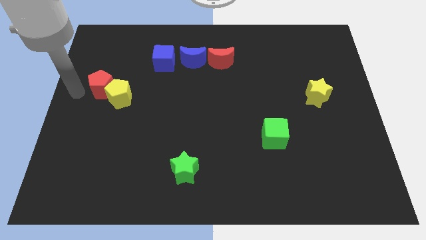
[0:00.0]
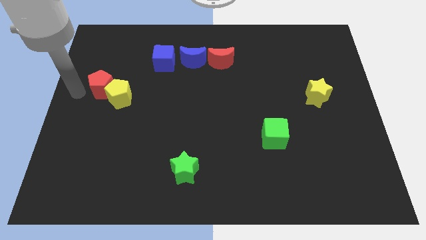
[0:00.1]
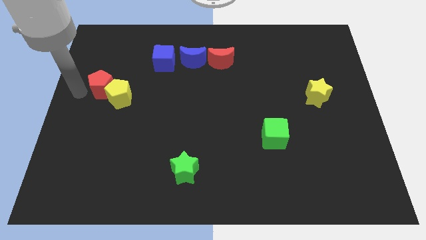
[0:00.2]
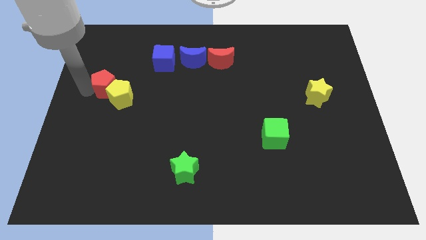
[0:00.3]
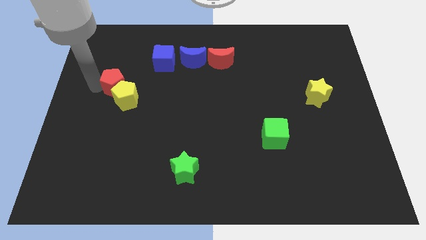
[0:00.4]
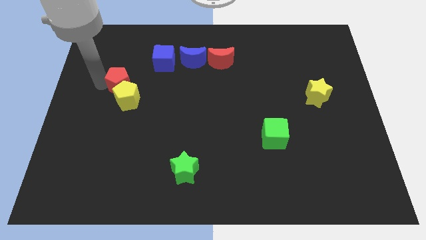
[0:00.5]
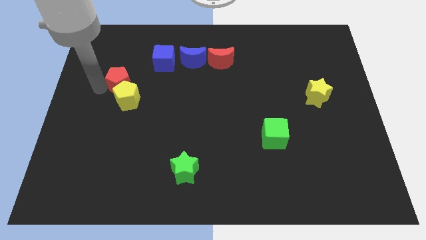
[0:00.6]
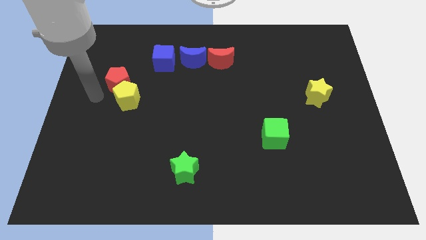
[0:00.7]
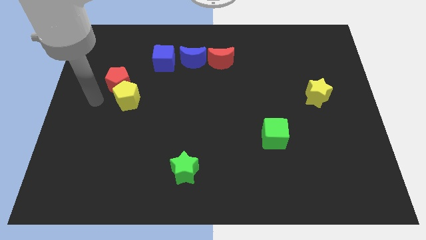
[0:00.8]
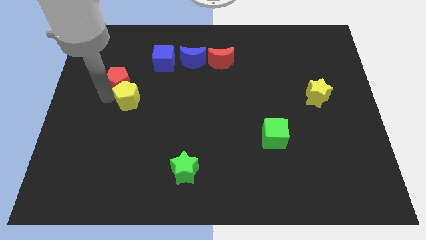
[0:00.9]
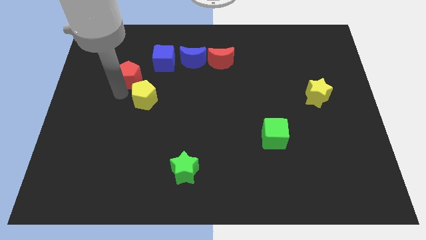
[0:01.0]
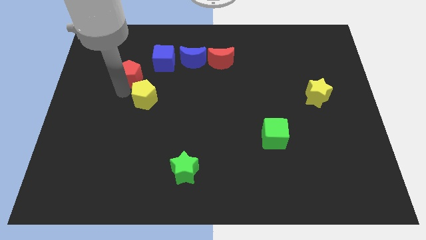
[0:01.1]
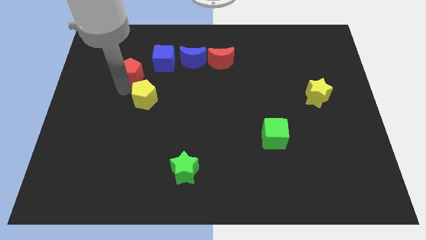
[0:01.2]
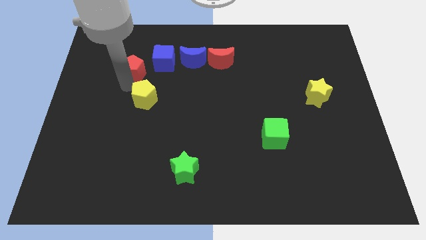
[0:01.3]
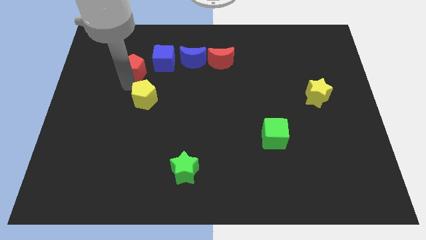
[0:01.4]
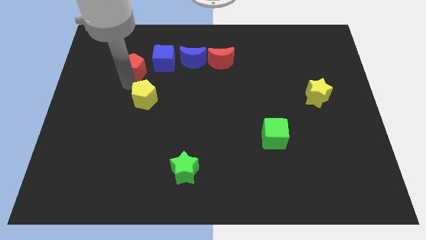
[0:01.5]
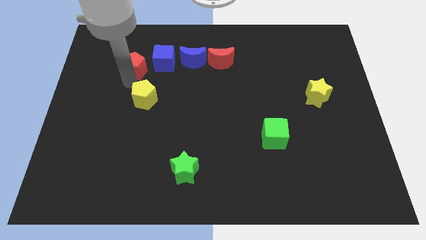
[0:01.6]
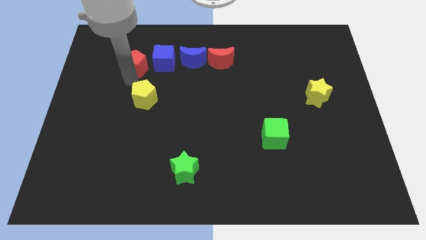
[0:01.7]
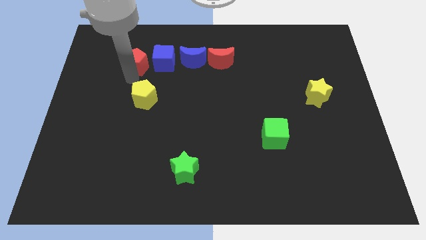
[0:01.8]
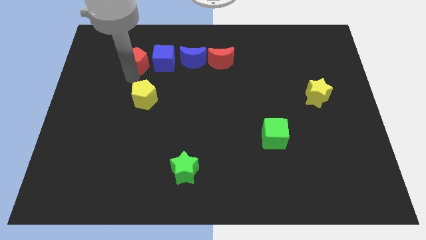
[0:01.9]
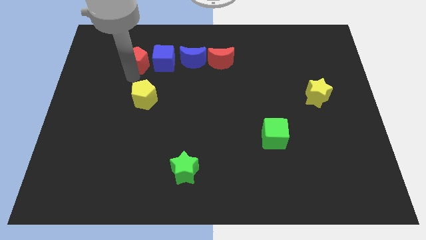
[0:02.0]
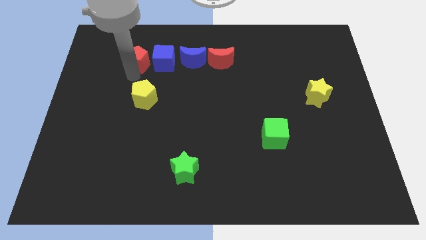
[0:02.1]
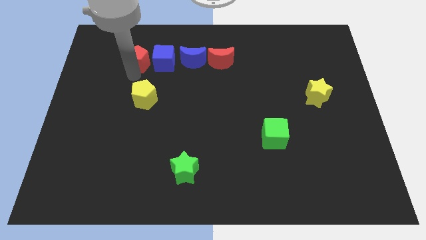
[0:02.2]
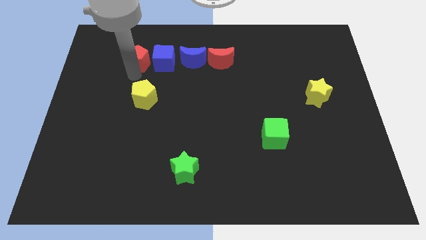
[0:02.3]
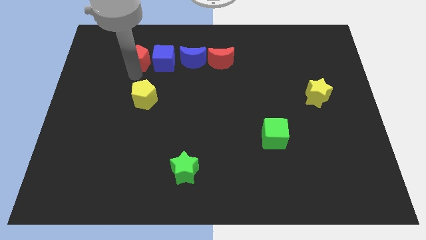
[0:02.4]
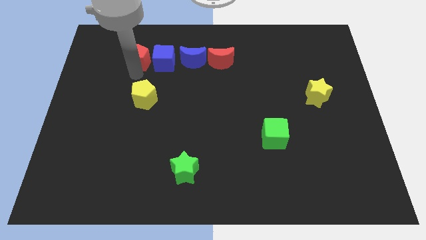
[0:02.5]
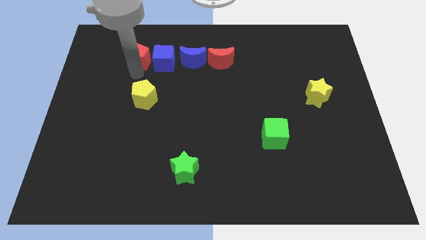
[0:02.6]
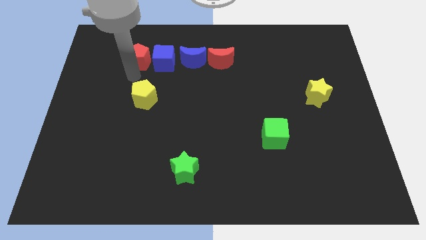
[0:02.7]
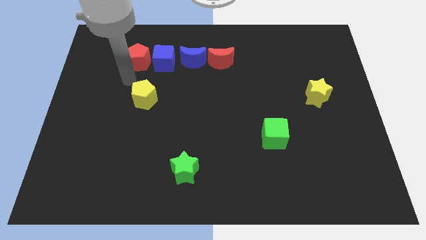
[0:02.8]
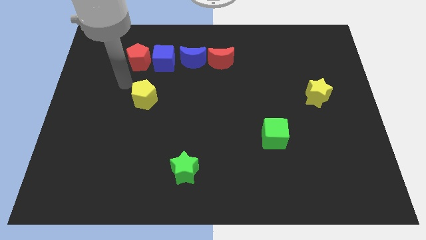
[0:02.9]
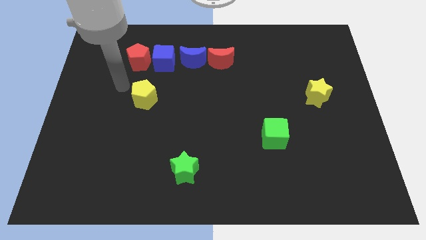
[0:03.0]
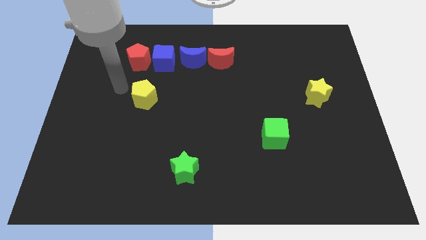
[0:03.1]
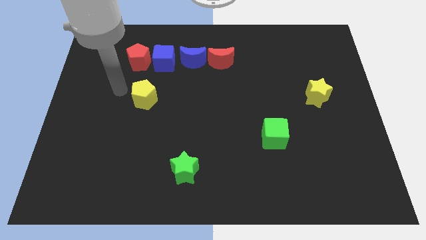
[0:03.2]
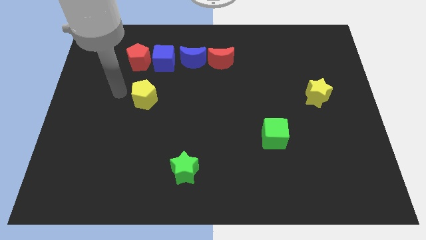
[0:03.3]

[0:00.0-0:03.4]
slide the red pentagon and the yellow pentagon diagonal to each other

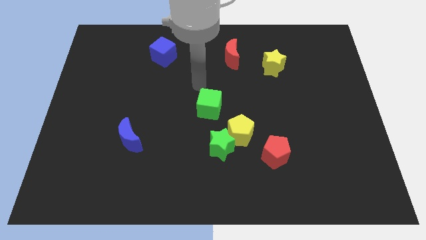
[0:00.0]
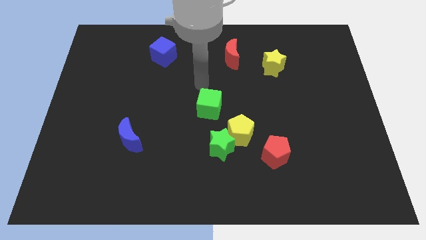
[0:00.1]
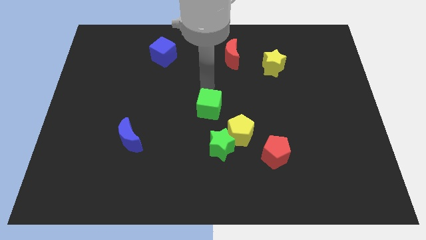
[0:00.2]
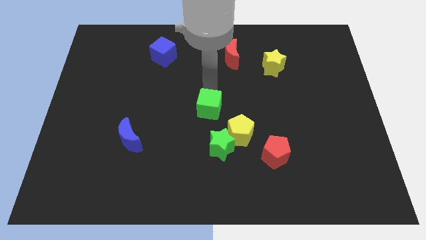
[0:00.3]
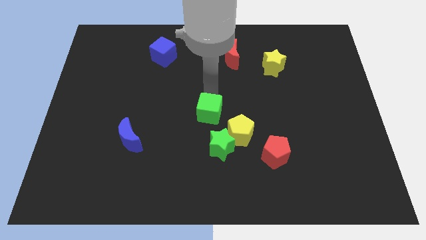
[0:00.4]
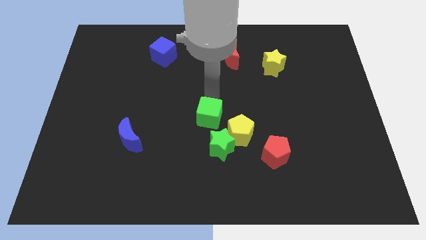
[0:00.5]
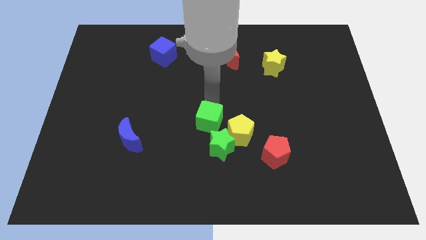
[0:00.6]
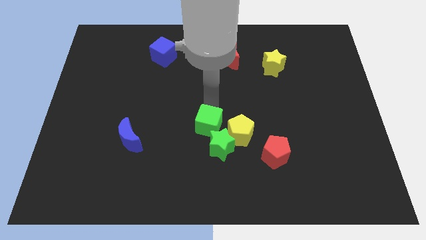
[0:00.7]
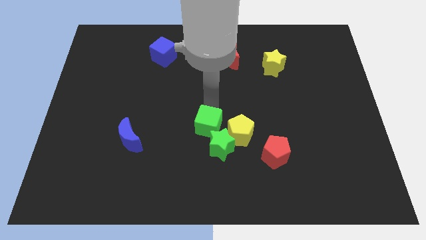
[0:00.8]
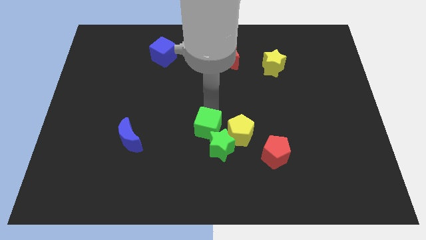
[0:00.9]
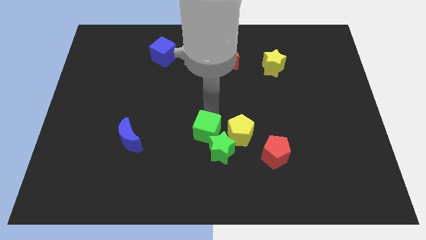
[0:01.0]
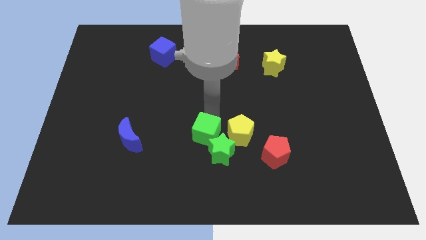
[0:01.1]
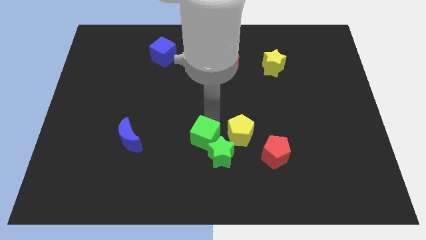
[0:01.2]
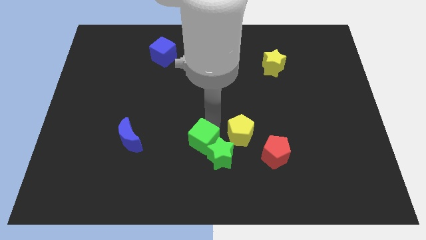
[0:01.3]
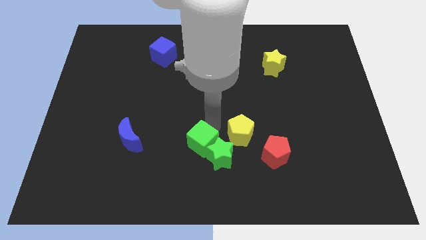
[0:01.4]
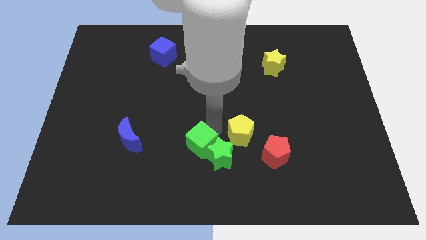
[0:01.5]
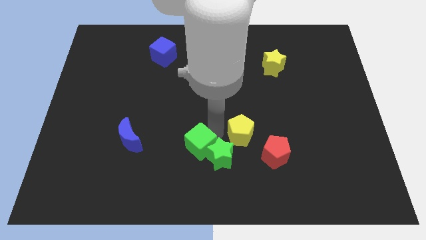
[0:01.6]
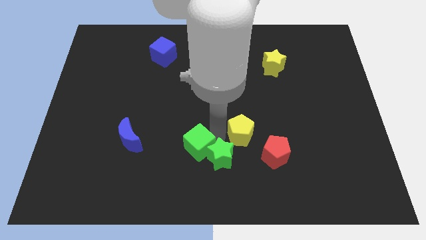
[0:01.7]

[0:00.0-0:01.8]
move the green cube into green star

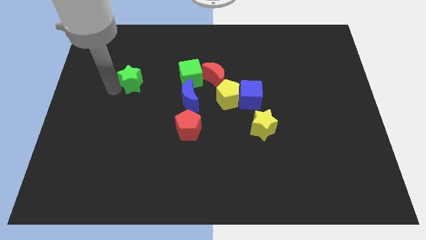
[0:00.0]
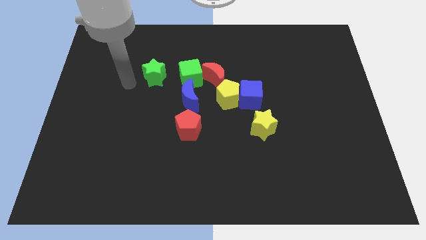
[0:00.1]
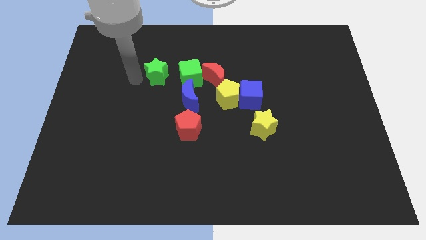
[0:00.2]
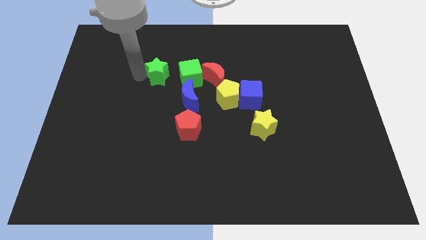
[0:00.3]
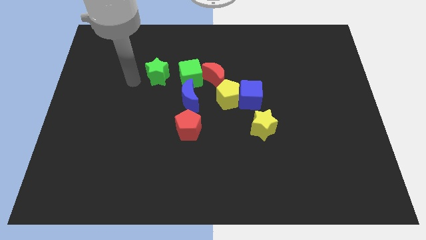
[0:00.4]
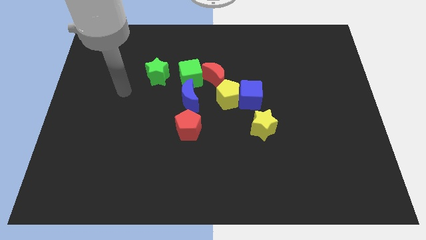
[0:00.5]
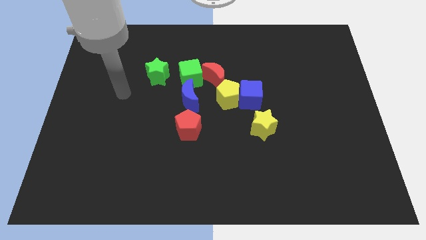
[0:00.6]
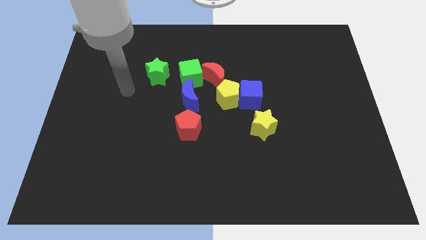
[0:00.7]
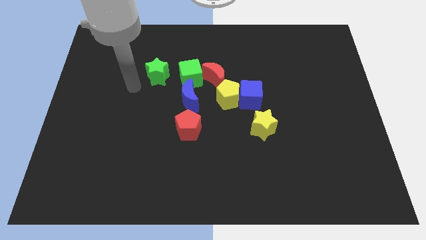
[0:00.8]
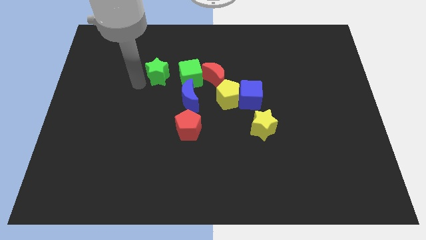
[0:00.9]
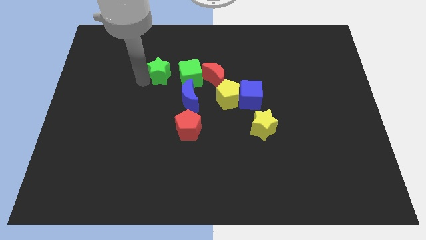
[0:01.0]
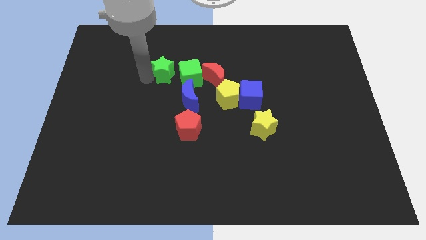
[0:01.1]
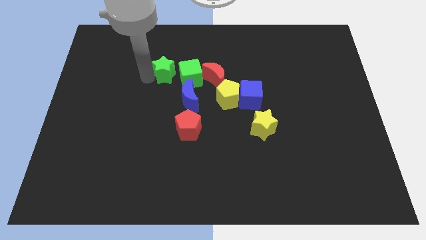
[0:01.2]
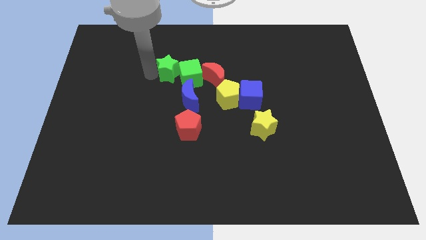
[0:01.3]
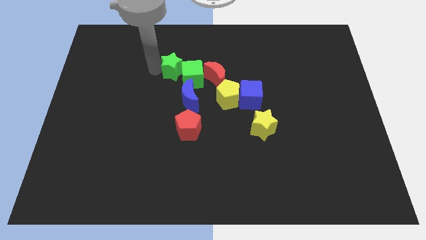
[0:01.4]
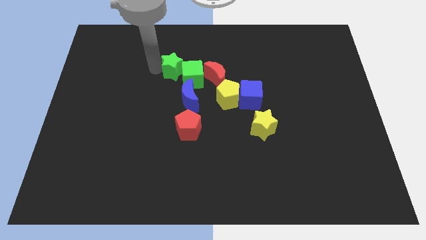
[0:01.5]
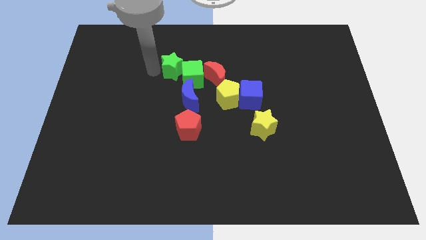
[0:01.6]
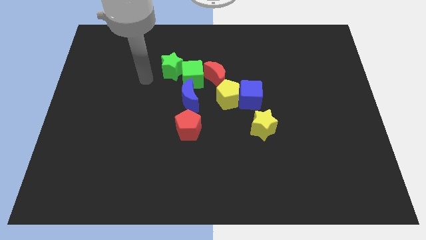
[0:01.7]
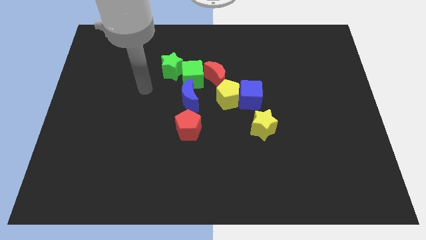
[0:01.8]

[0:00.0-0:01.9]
place green star near to the green cube

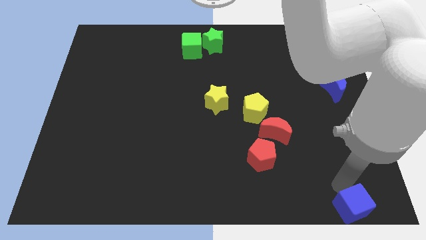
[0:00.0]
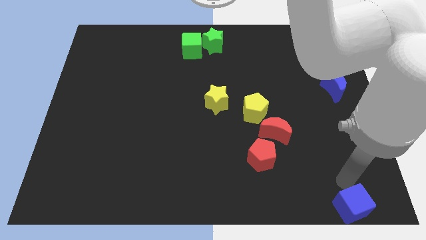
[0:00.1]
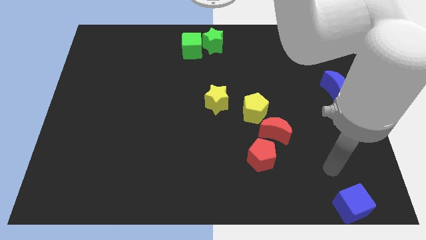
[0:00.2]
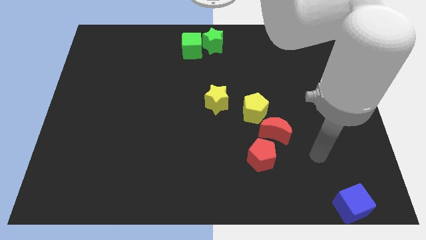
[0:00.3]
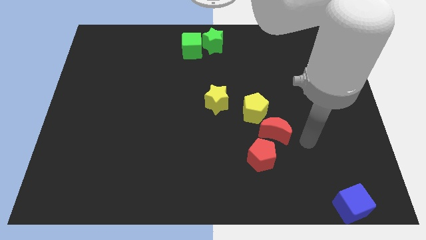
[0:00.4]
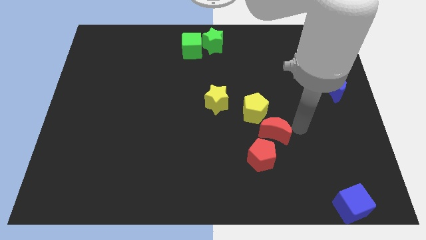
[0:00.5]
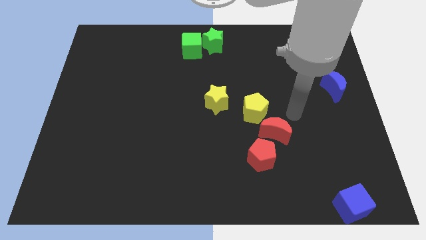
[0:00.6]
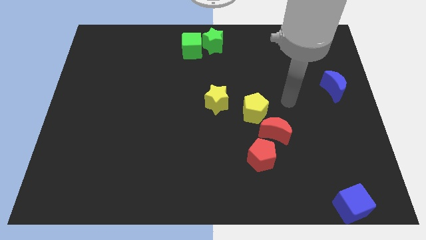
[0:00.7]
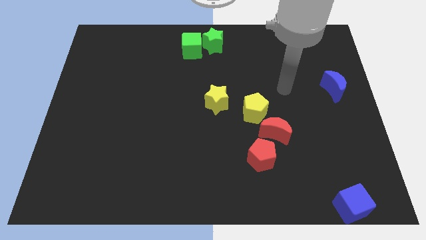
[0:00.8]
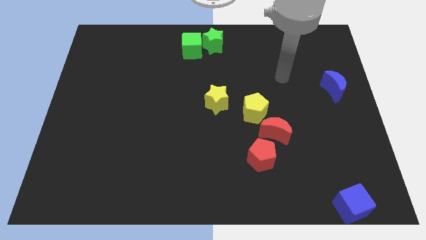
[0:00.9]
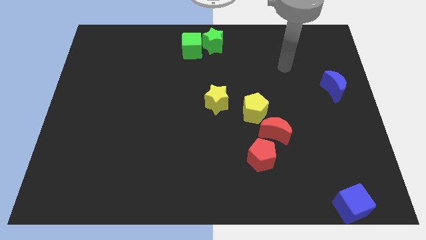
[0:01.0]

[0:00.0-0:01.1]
move your hand away from blue cube

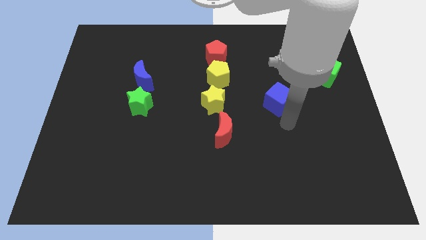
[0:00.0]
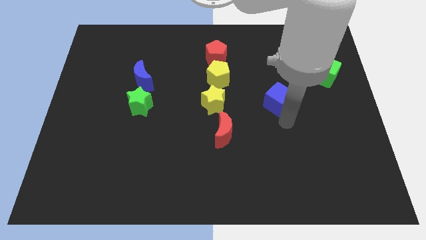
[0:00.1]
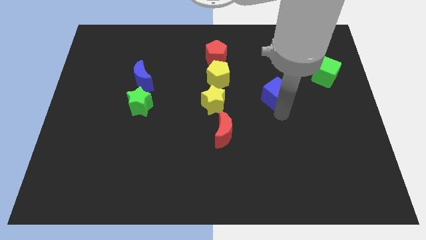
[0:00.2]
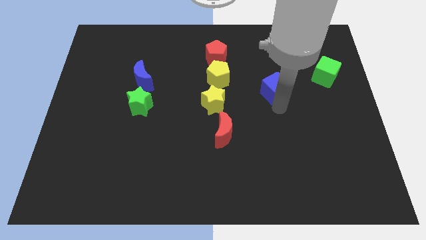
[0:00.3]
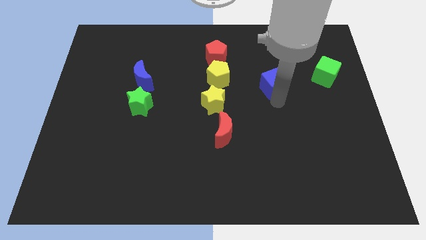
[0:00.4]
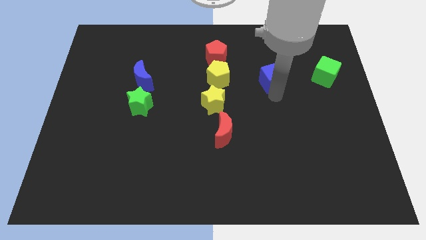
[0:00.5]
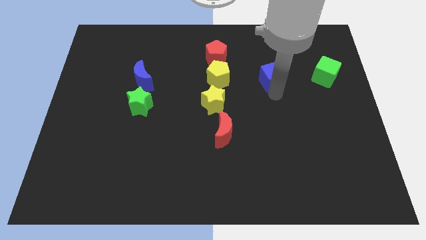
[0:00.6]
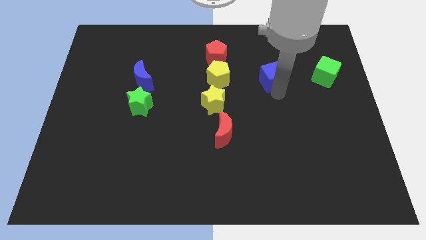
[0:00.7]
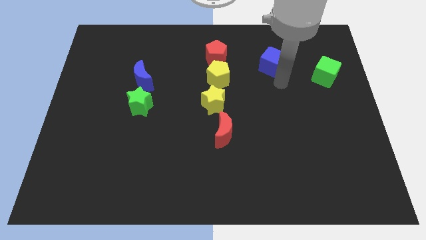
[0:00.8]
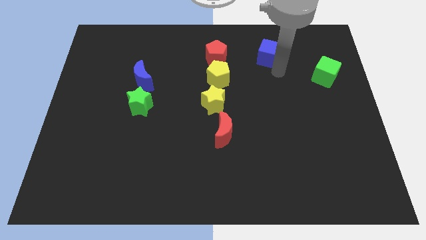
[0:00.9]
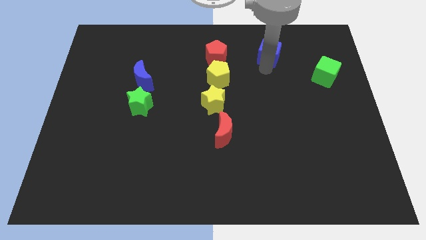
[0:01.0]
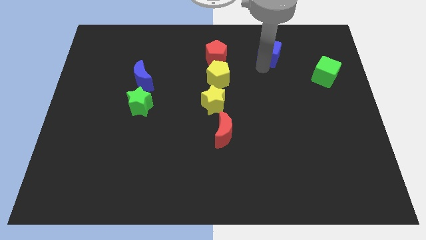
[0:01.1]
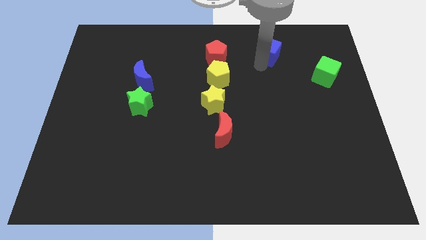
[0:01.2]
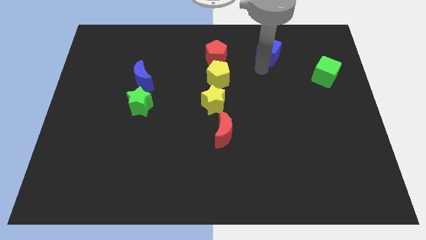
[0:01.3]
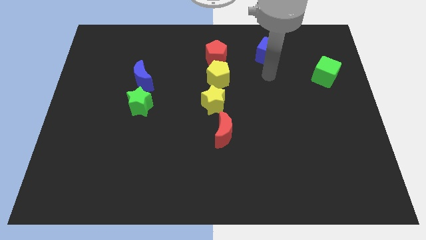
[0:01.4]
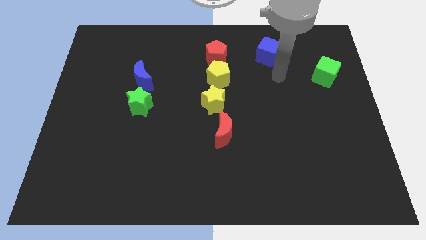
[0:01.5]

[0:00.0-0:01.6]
move blue cube to the right side of the red pentagon
